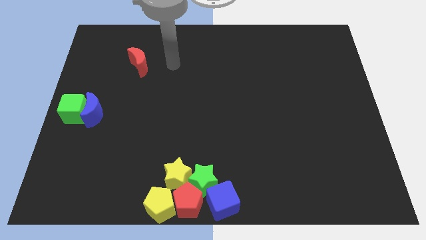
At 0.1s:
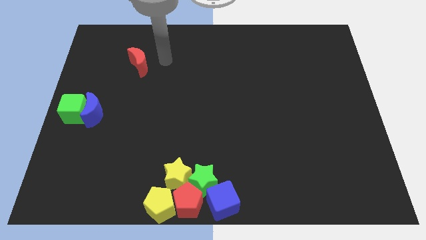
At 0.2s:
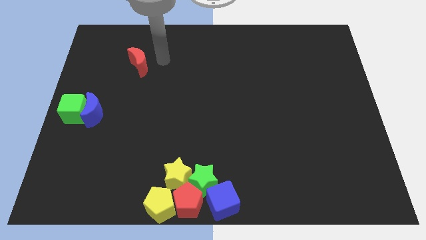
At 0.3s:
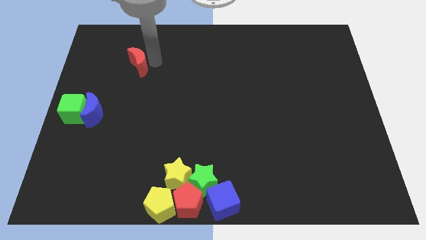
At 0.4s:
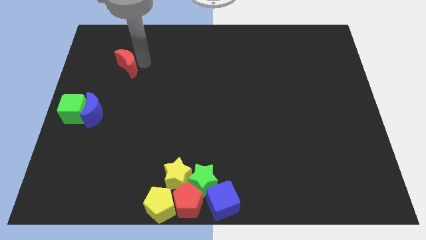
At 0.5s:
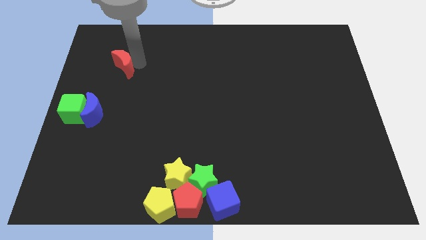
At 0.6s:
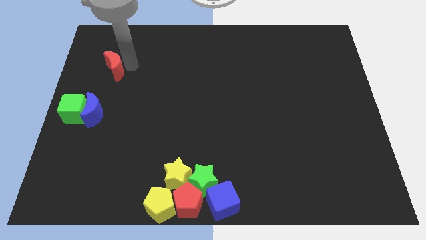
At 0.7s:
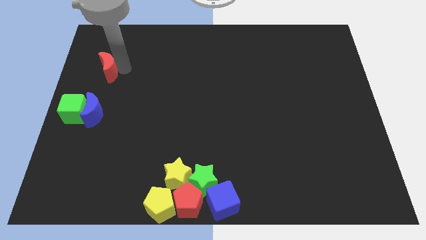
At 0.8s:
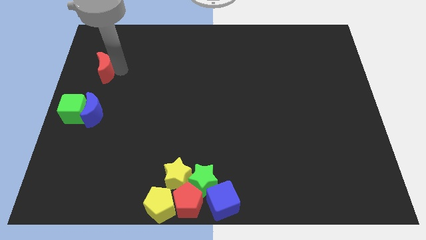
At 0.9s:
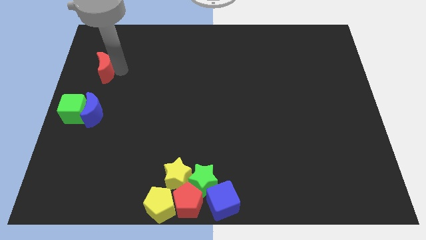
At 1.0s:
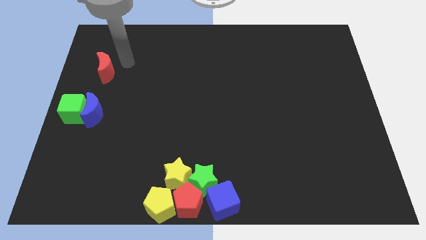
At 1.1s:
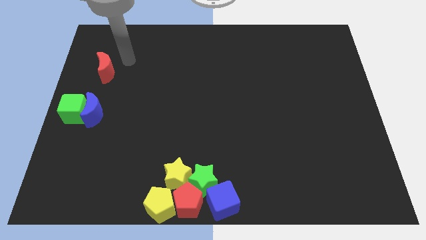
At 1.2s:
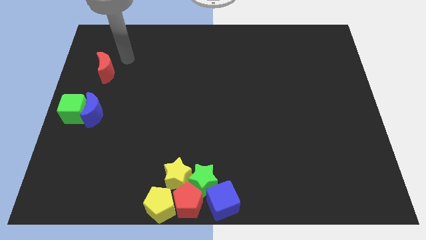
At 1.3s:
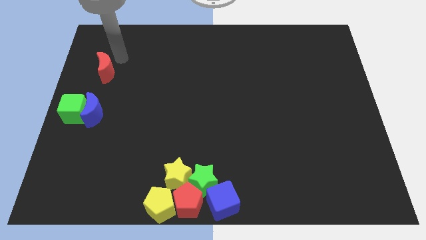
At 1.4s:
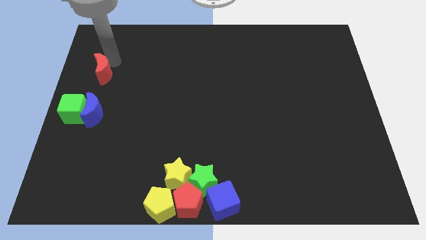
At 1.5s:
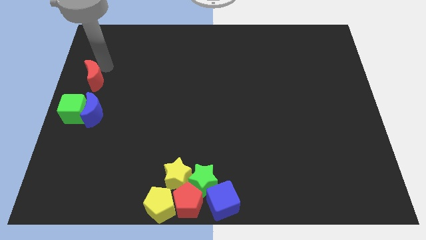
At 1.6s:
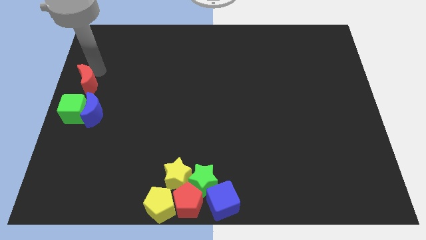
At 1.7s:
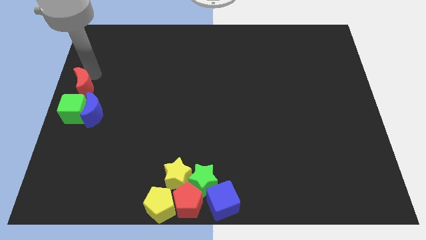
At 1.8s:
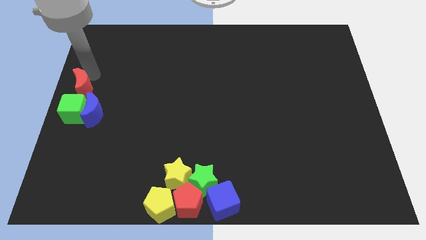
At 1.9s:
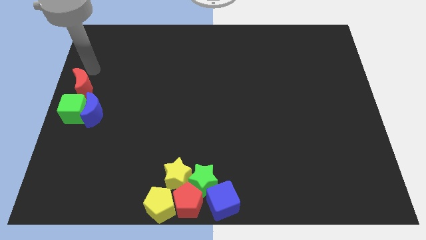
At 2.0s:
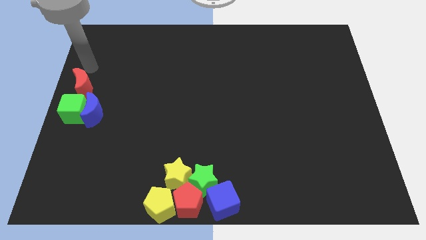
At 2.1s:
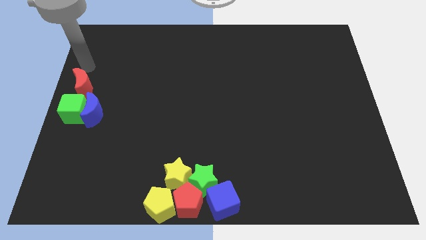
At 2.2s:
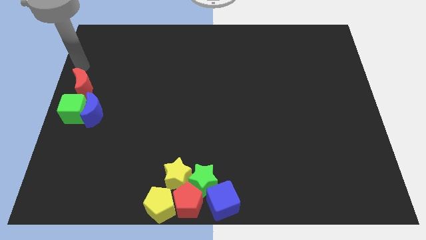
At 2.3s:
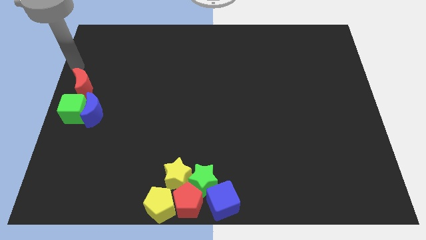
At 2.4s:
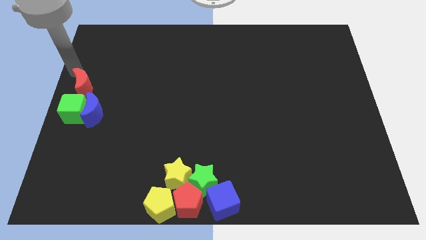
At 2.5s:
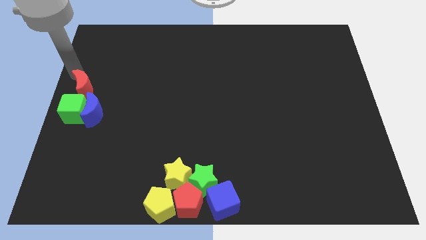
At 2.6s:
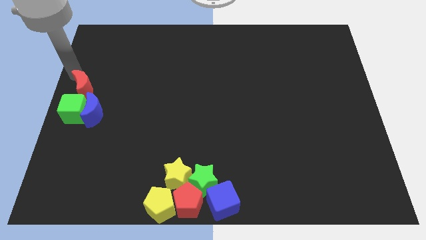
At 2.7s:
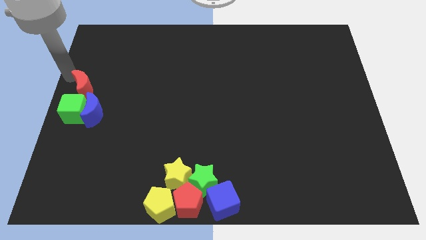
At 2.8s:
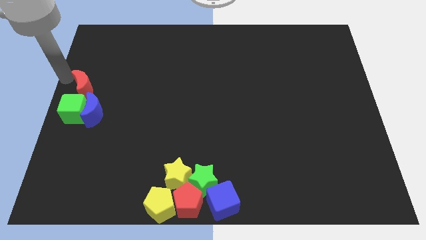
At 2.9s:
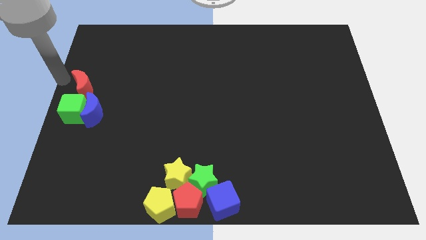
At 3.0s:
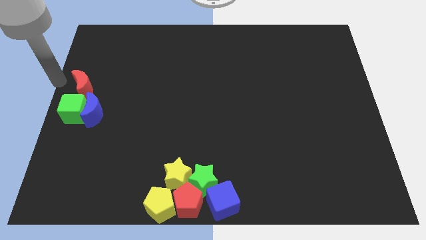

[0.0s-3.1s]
move red moon bottom left middle of the board

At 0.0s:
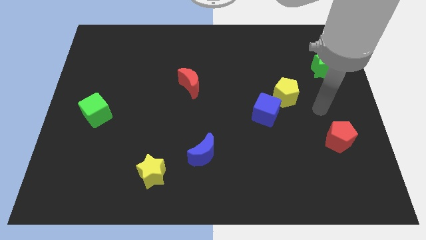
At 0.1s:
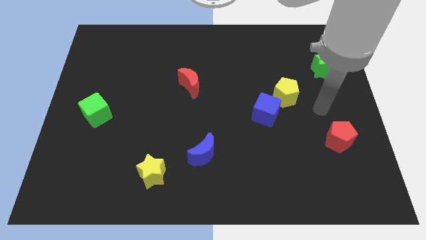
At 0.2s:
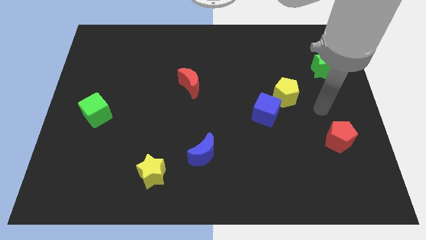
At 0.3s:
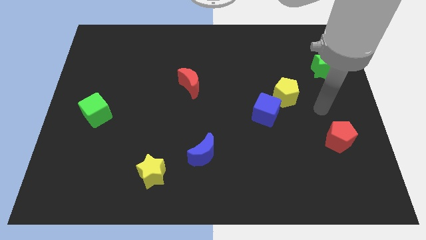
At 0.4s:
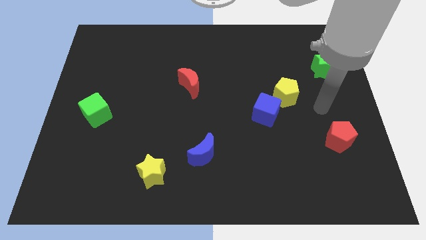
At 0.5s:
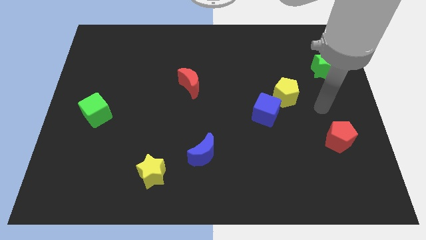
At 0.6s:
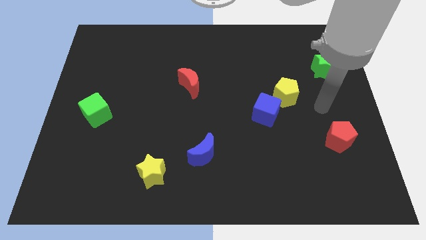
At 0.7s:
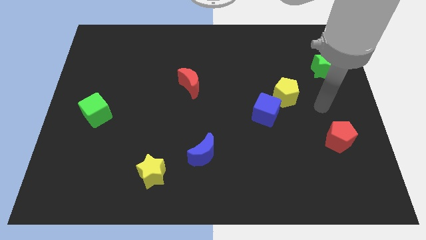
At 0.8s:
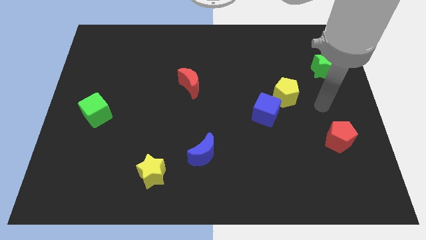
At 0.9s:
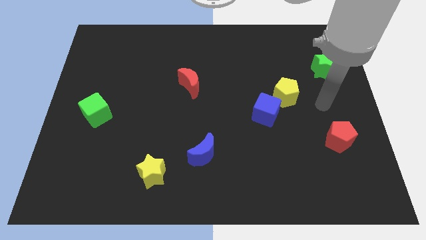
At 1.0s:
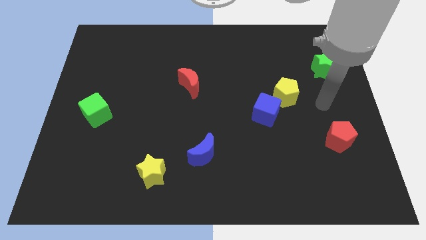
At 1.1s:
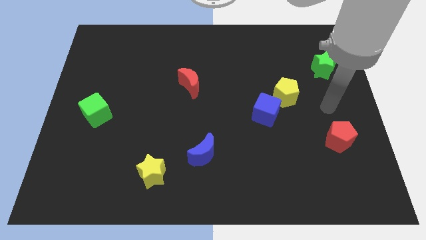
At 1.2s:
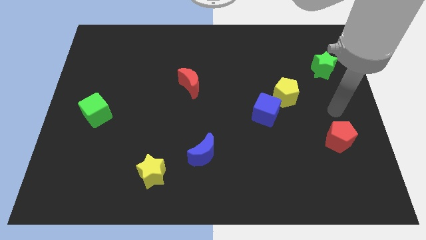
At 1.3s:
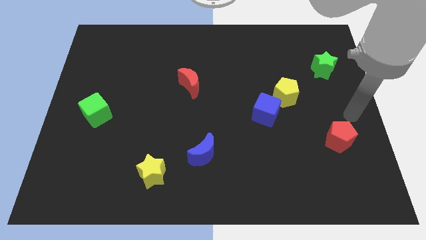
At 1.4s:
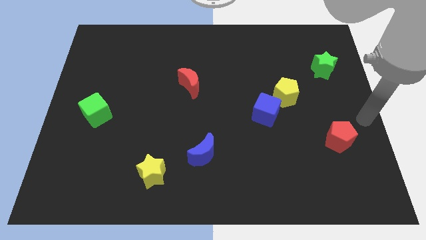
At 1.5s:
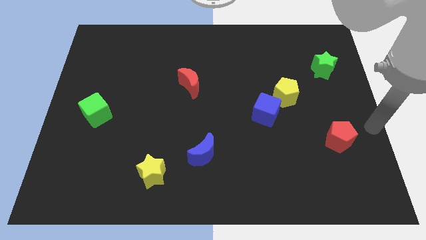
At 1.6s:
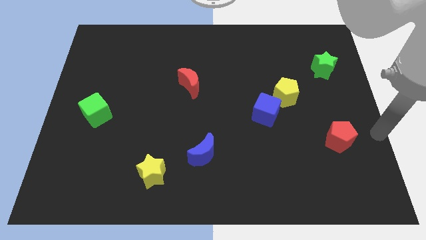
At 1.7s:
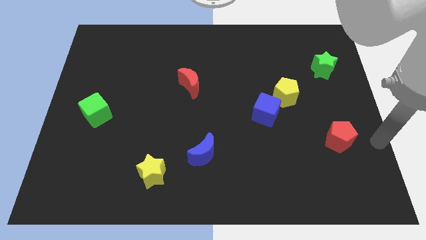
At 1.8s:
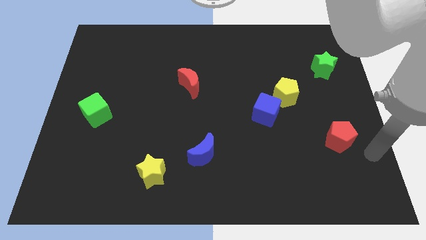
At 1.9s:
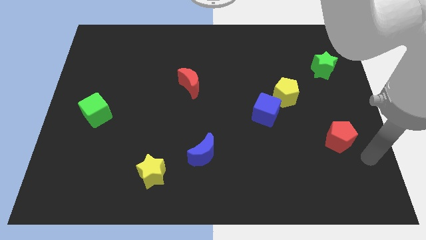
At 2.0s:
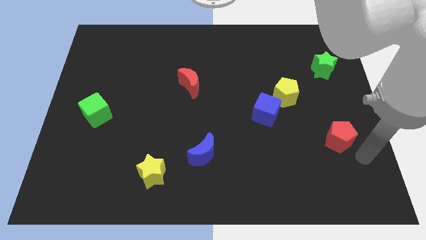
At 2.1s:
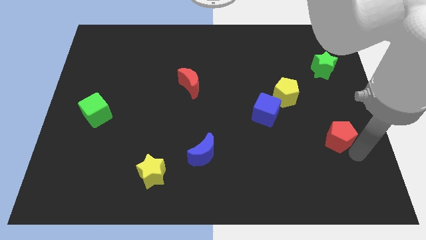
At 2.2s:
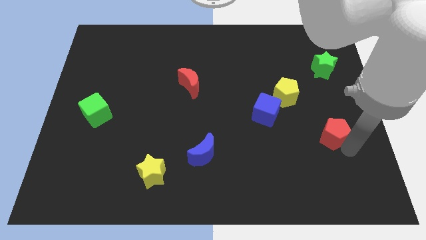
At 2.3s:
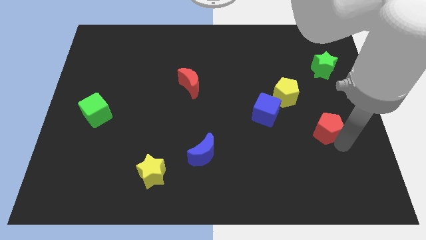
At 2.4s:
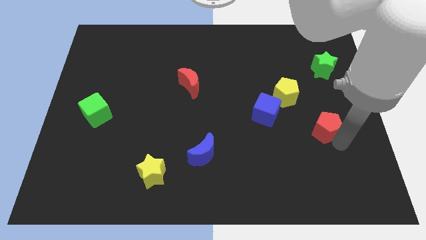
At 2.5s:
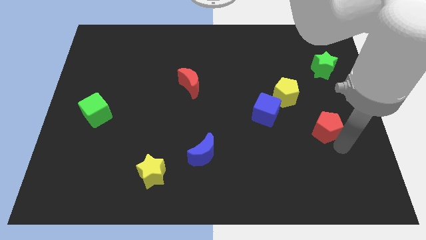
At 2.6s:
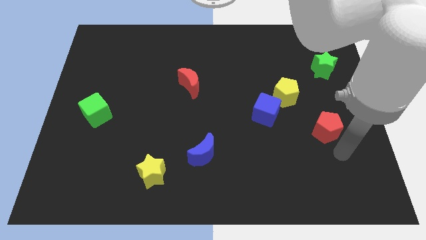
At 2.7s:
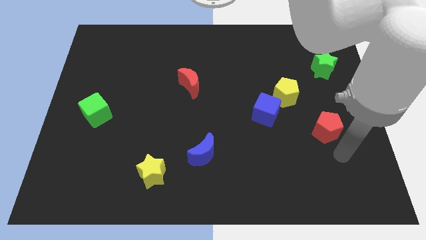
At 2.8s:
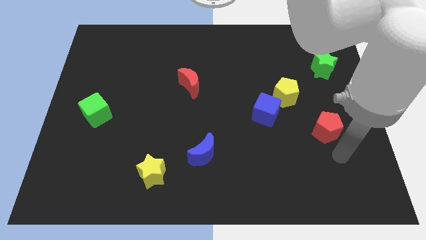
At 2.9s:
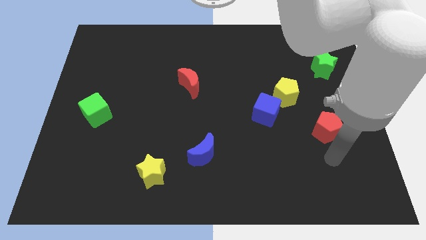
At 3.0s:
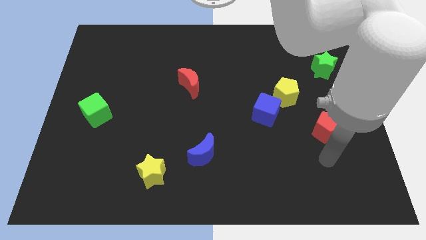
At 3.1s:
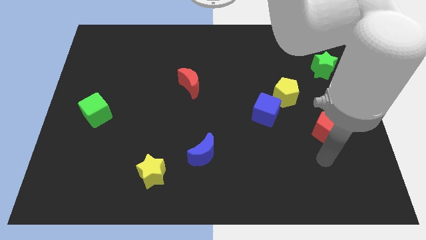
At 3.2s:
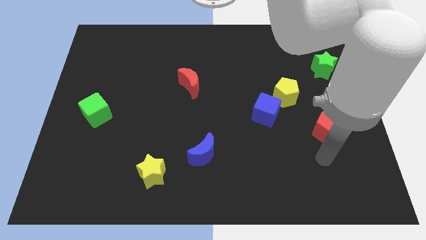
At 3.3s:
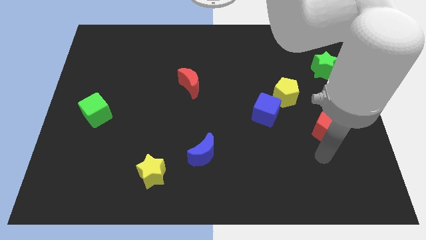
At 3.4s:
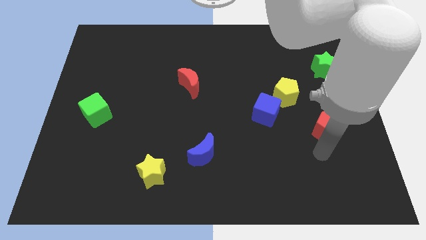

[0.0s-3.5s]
push the red pentagon up slightly

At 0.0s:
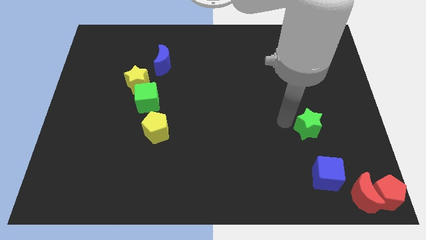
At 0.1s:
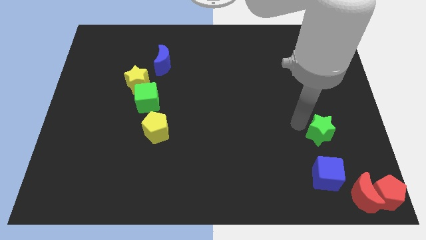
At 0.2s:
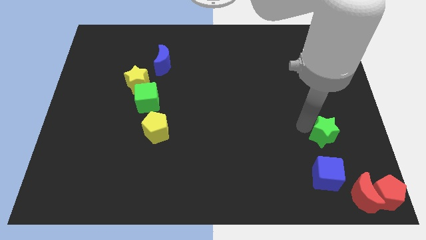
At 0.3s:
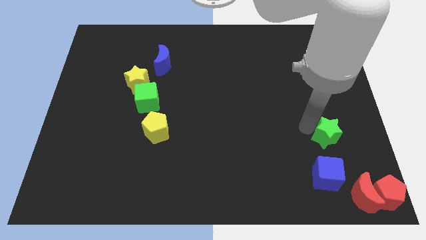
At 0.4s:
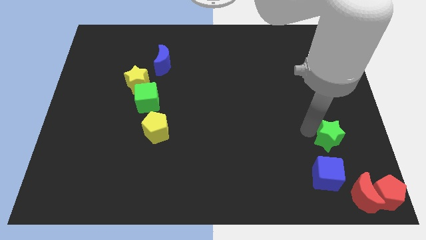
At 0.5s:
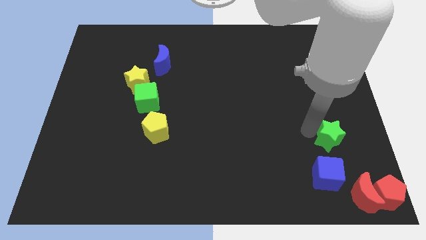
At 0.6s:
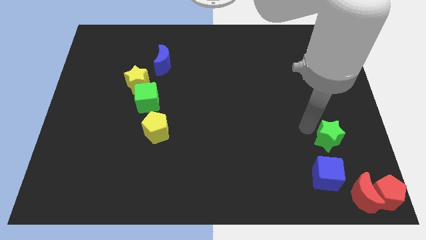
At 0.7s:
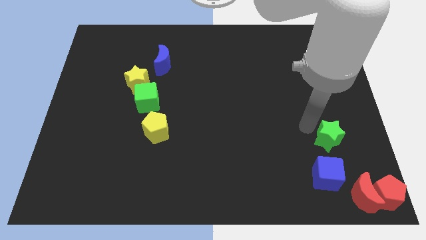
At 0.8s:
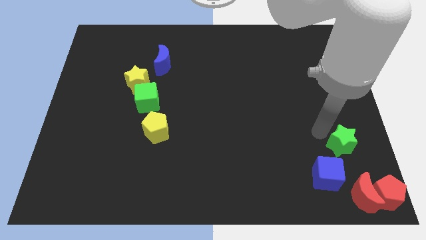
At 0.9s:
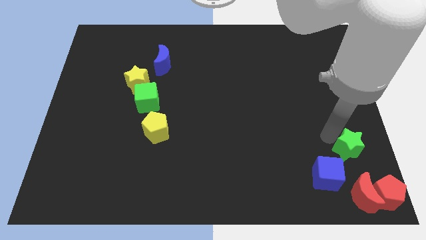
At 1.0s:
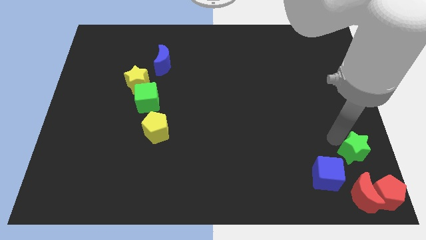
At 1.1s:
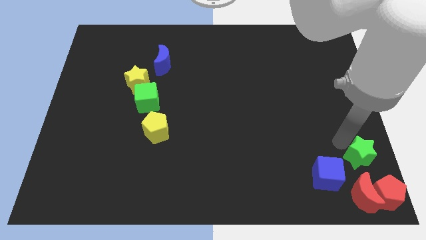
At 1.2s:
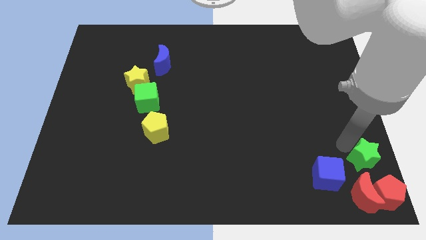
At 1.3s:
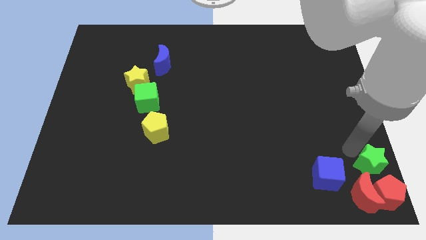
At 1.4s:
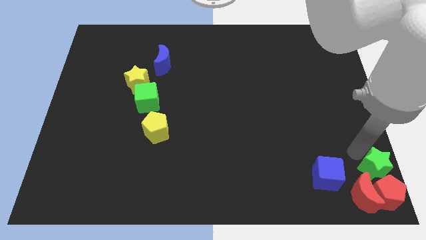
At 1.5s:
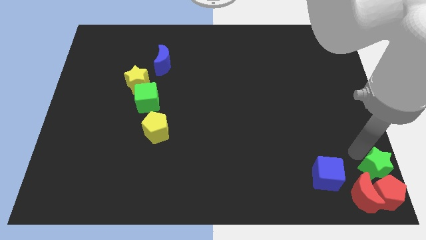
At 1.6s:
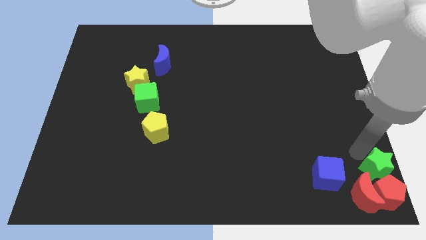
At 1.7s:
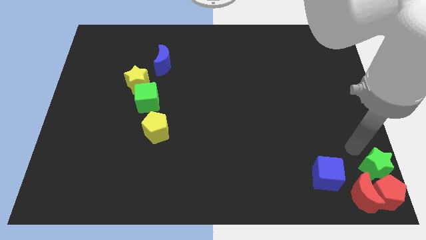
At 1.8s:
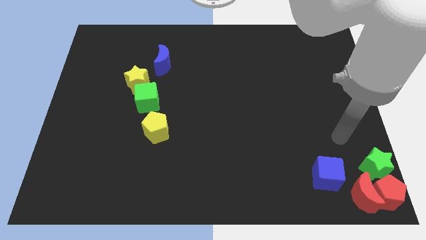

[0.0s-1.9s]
place green star to the top of red pentagon

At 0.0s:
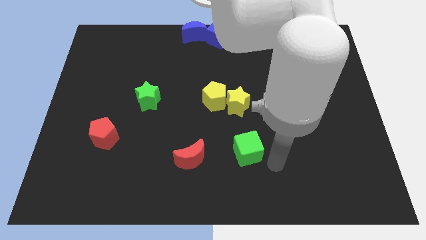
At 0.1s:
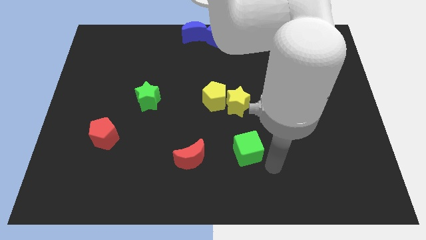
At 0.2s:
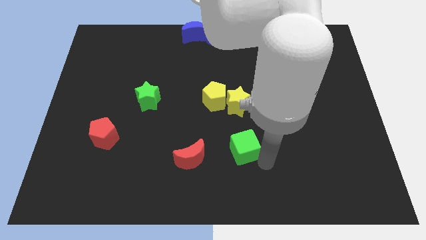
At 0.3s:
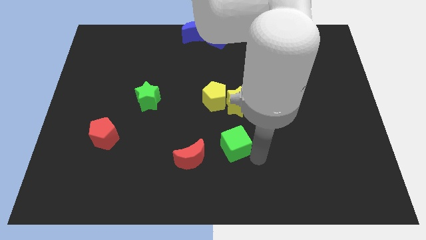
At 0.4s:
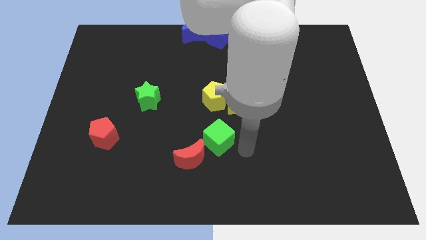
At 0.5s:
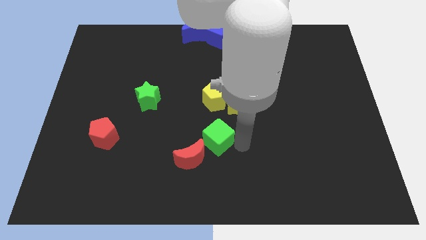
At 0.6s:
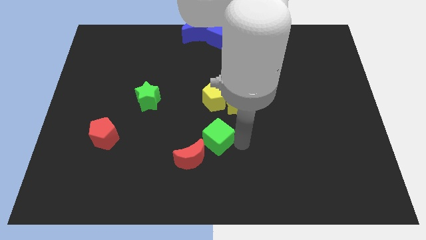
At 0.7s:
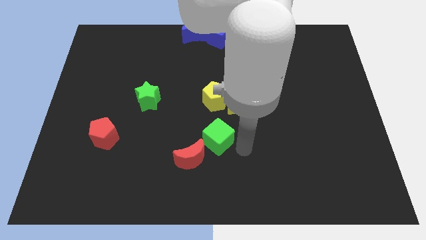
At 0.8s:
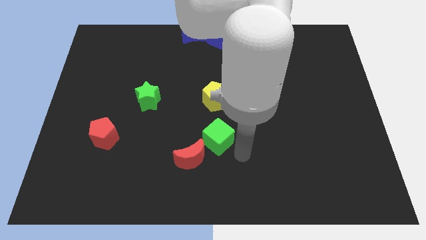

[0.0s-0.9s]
move the green cube parallel to the yellow pentagon
